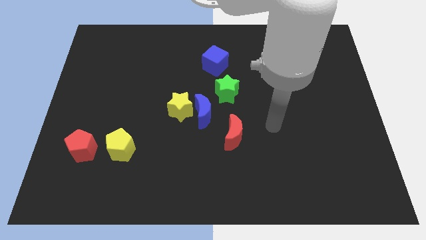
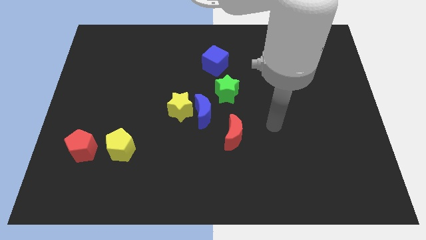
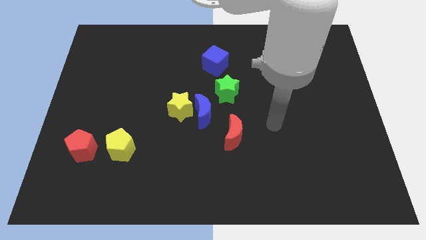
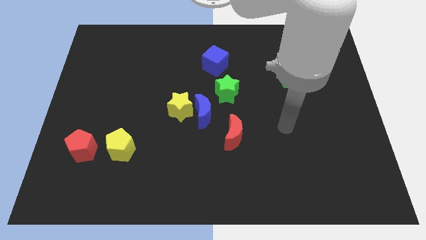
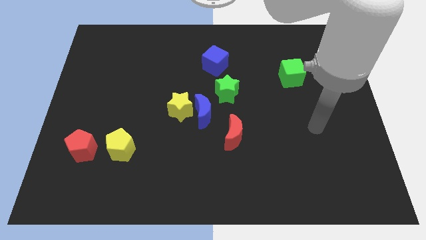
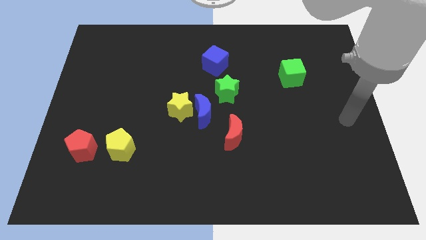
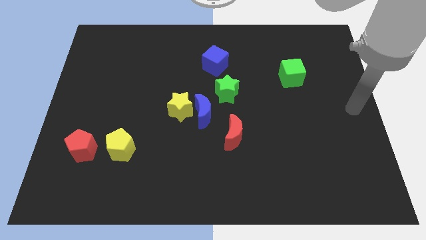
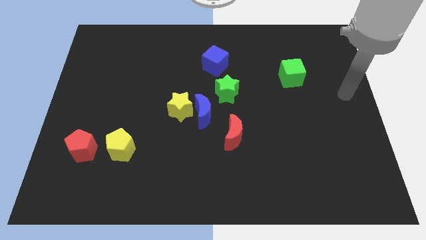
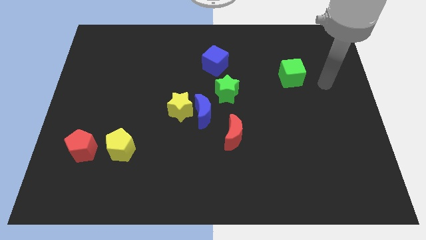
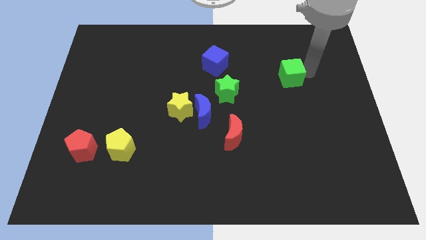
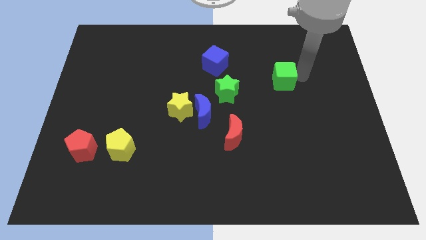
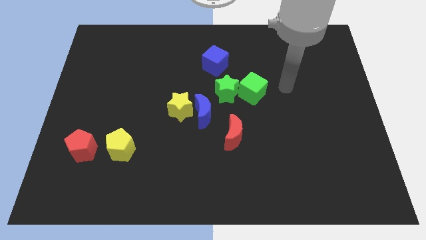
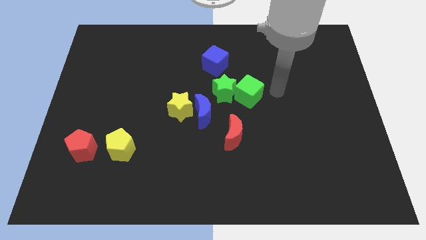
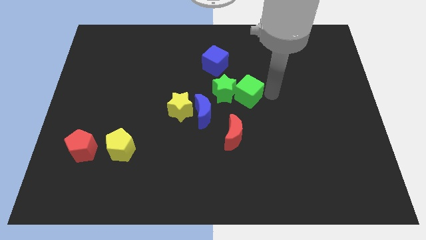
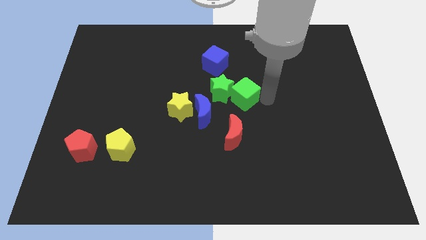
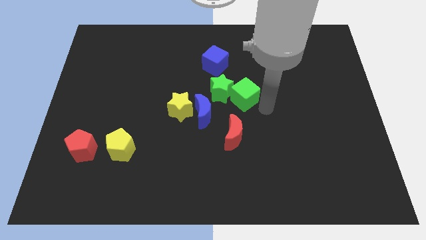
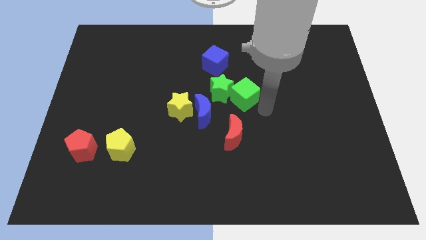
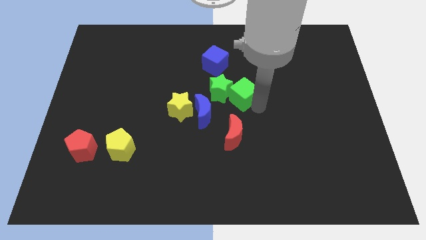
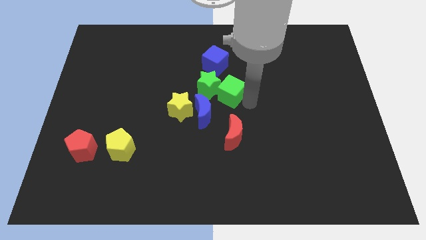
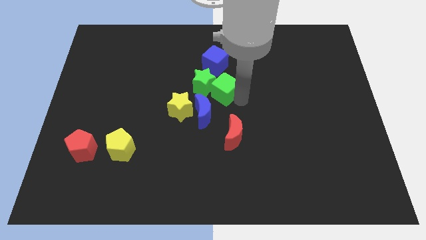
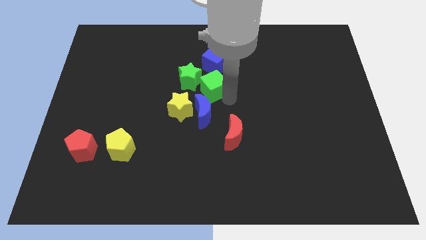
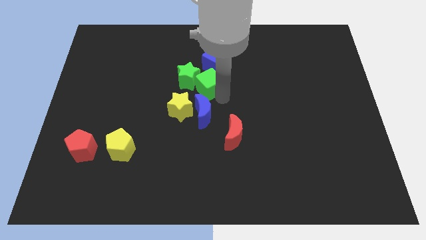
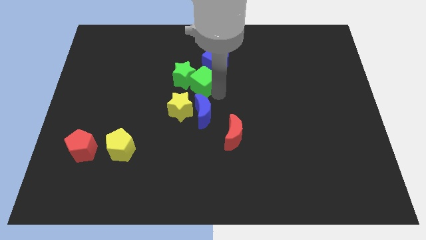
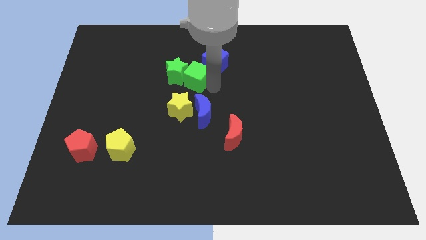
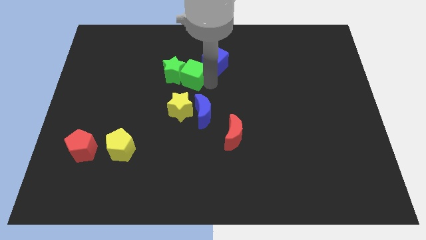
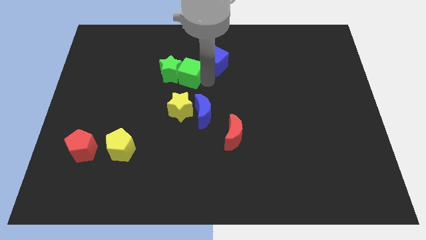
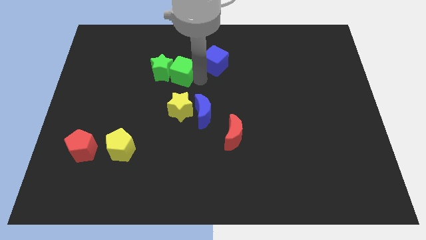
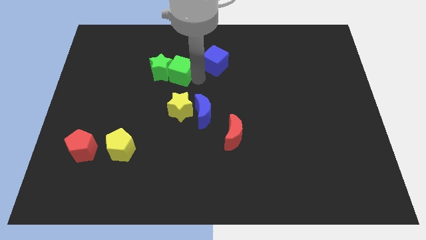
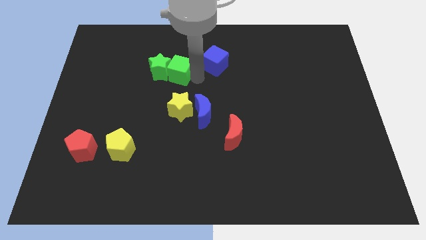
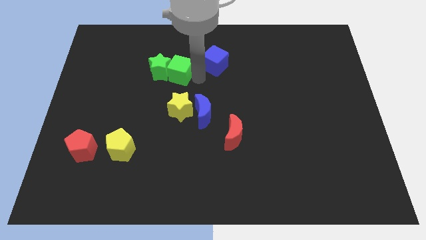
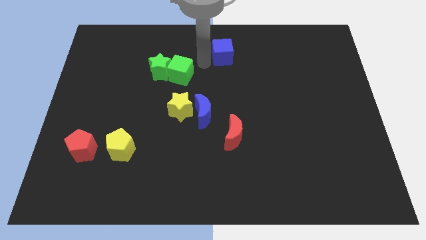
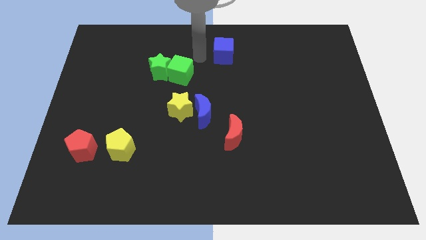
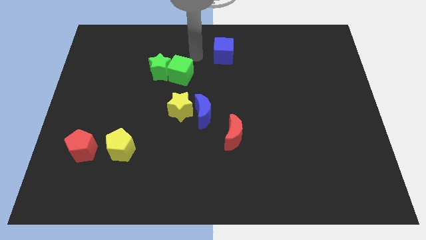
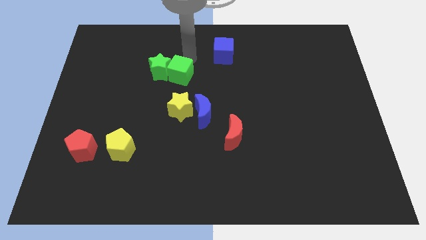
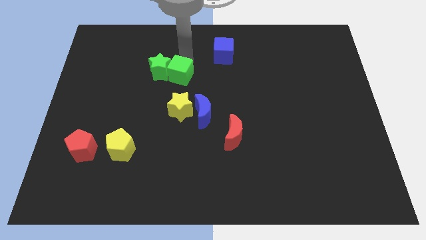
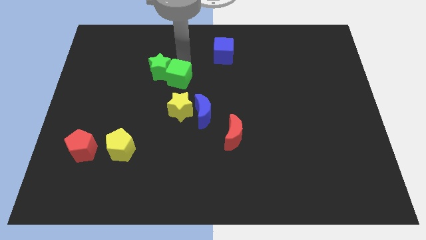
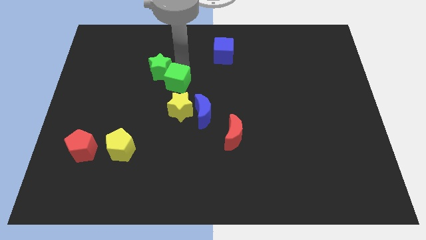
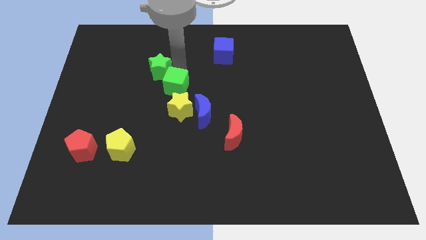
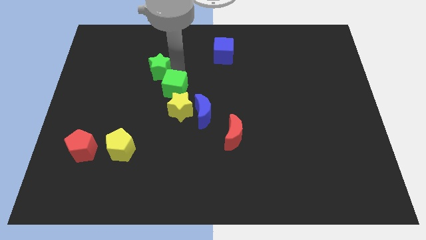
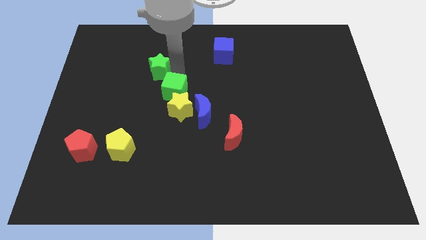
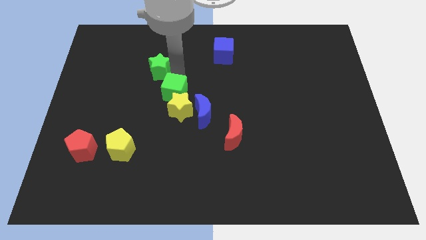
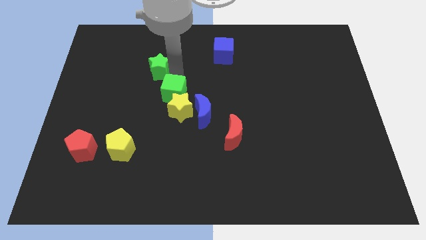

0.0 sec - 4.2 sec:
slide the green cube next to the yellow star

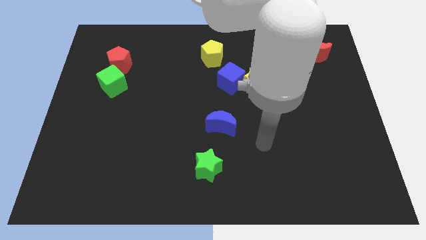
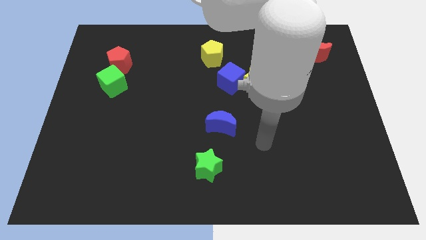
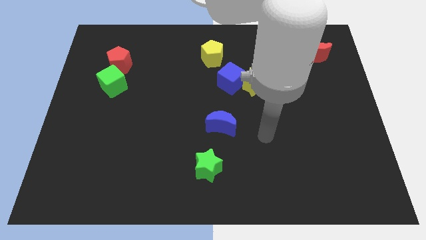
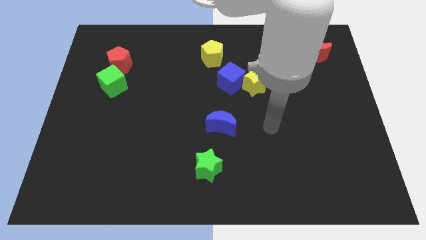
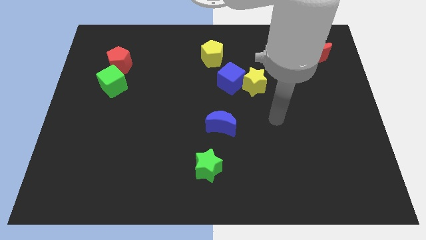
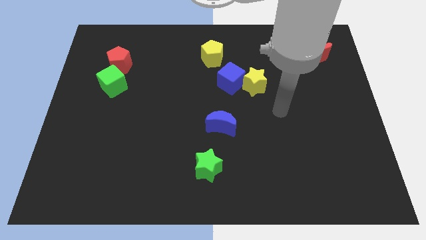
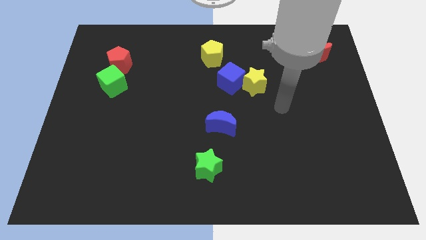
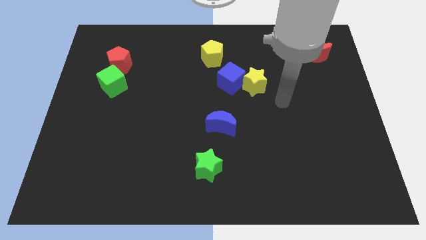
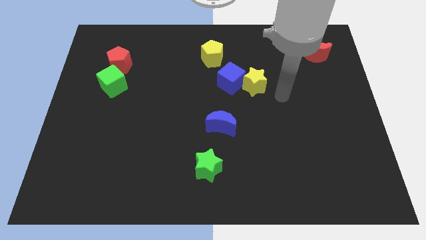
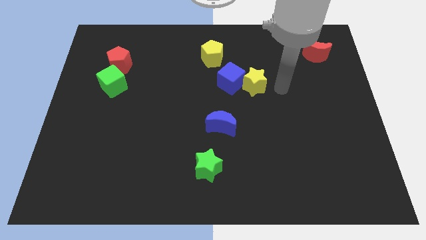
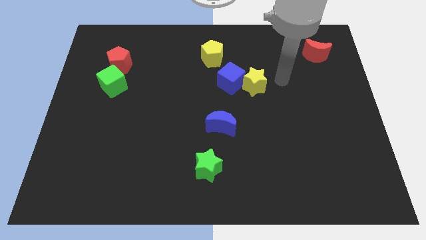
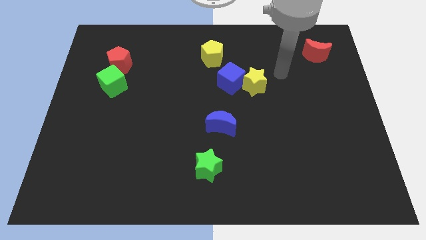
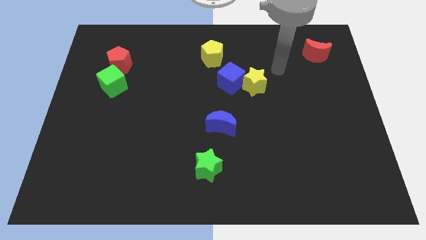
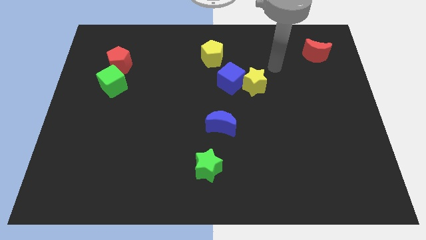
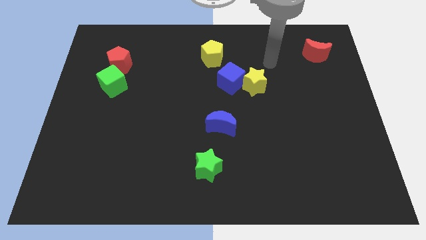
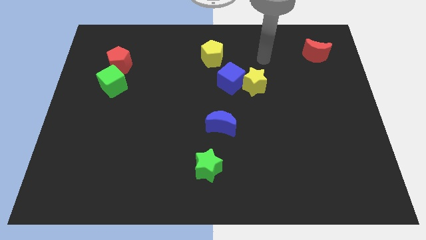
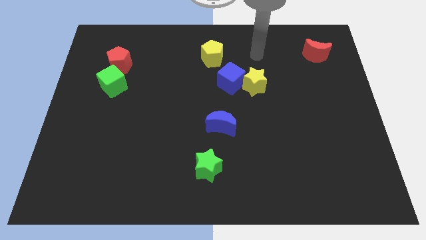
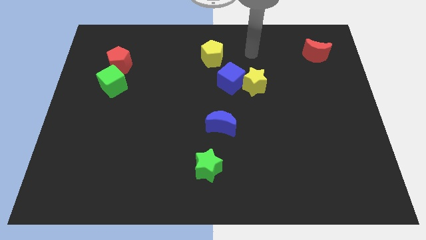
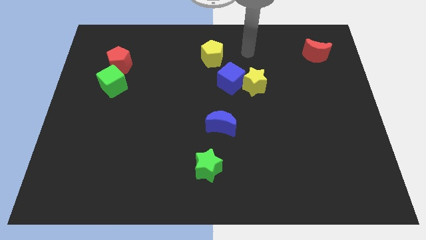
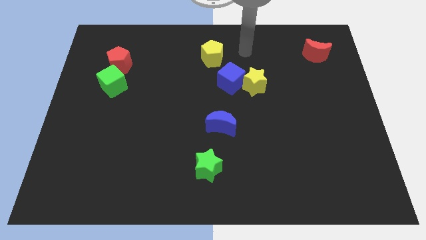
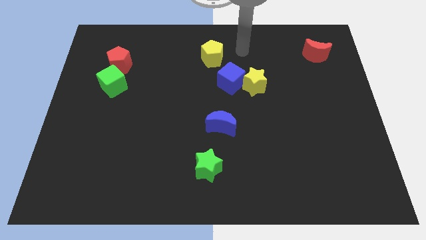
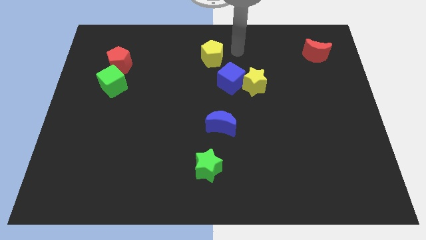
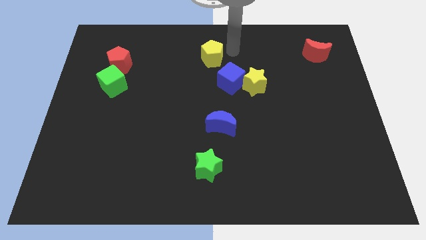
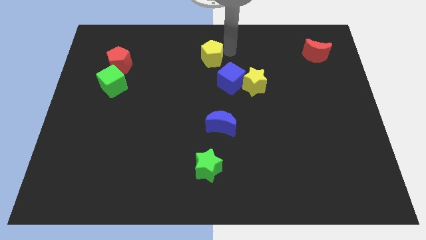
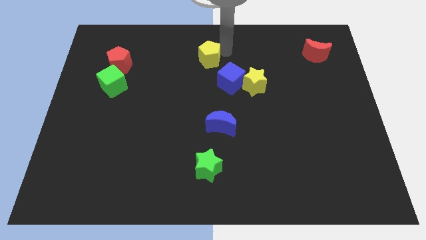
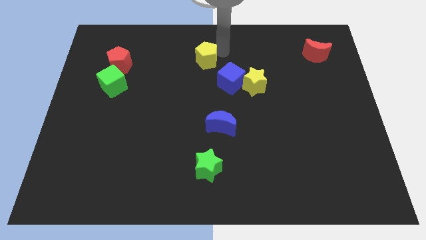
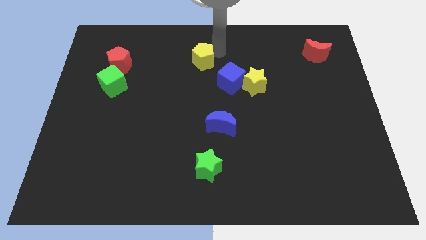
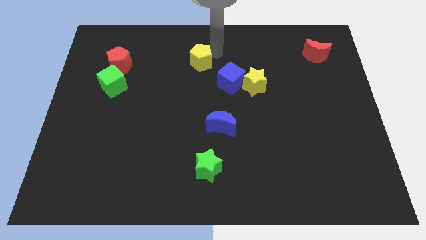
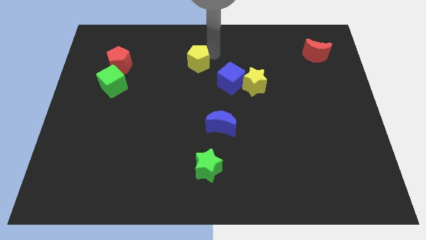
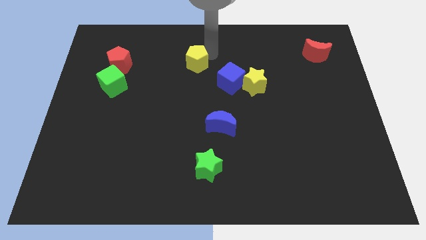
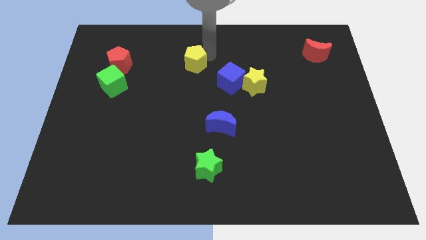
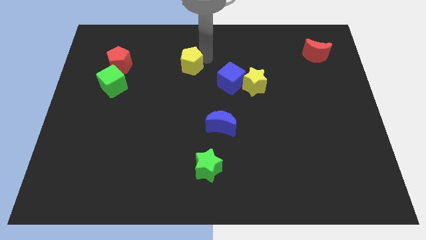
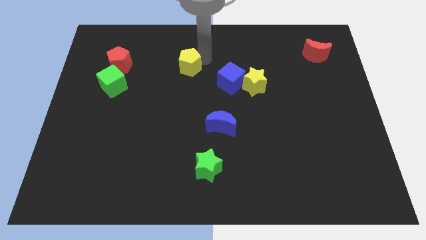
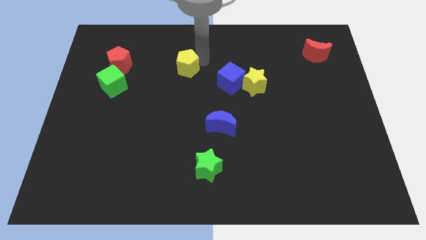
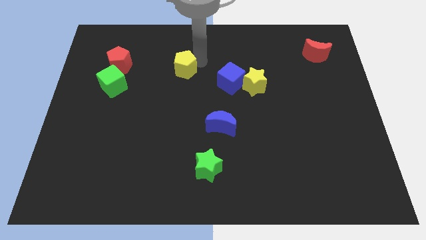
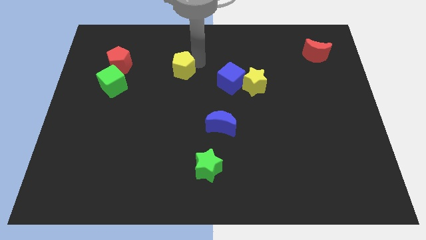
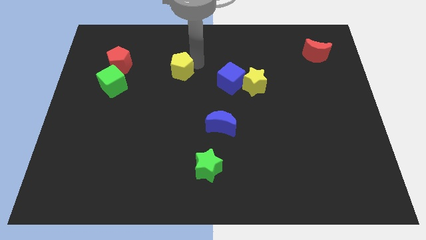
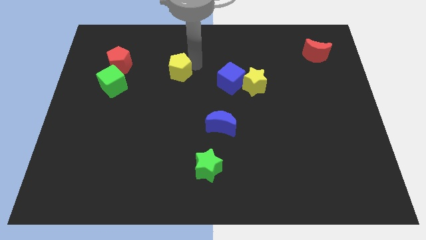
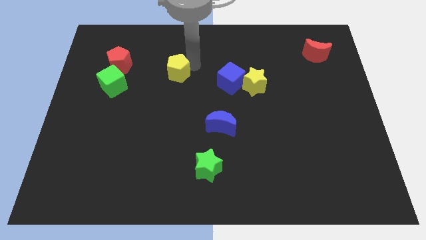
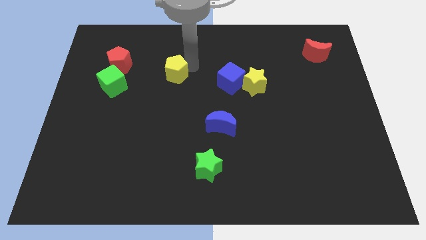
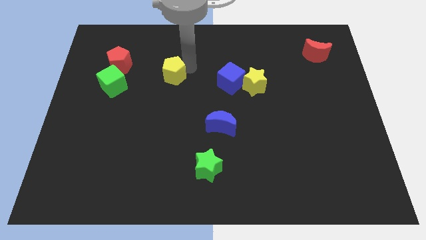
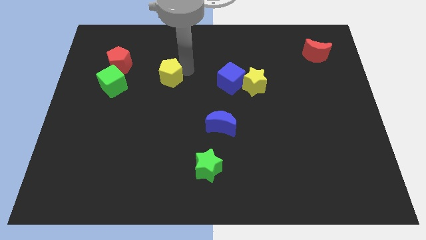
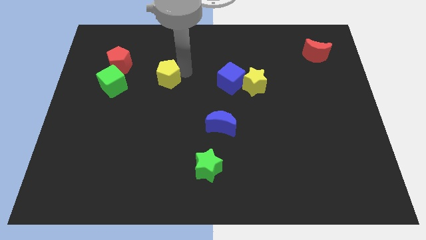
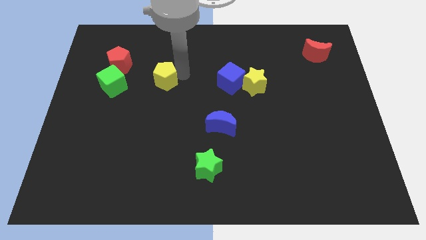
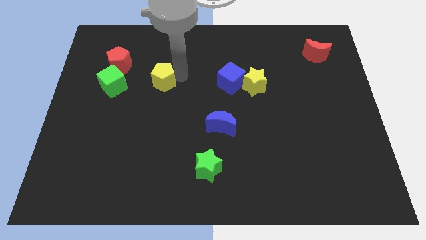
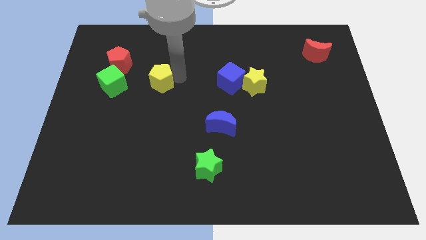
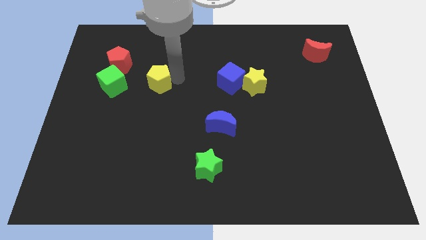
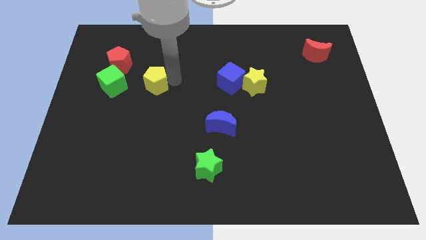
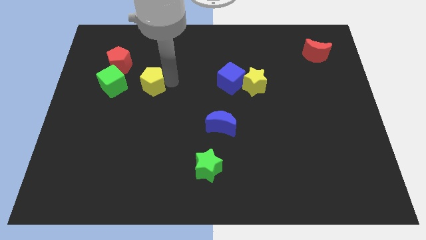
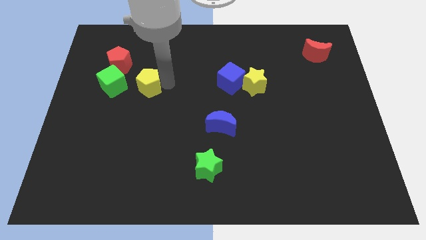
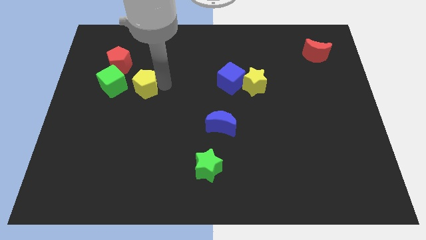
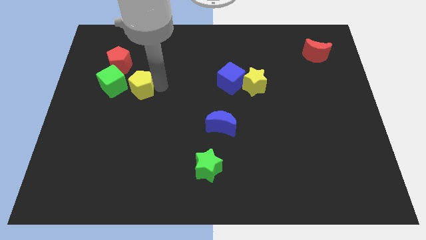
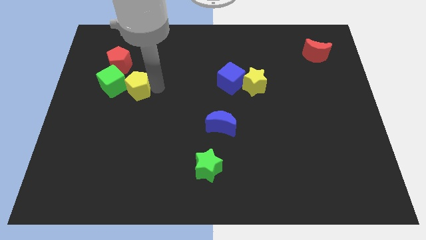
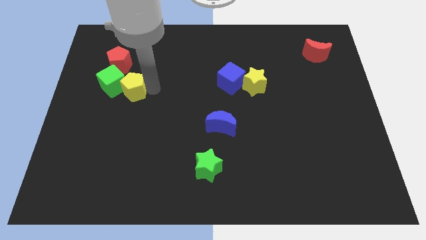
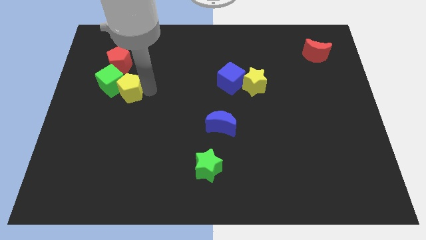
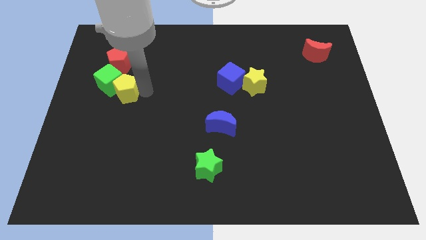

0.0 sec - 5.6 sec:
push the yellow pentagon next to the green cube
